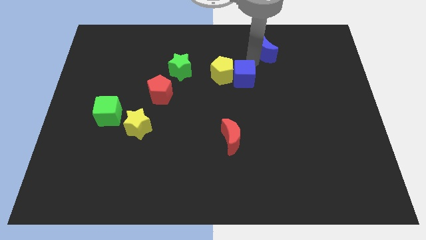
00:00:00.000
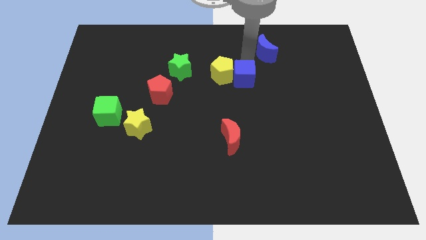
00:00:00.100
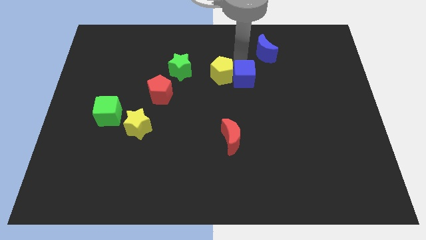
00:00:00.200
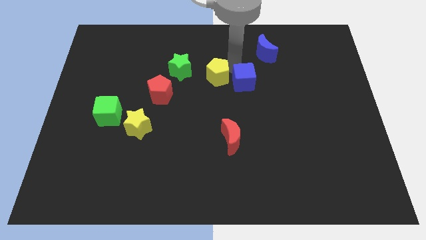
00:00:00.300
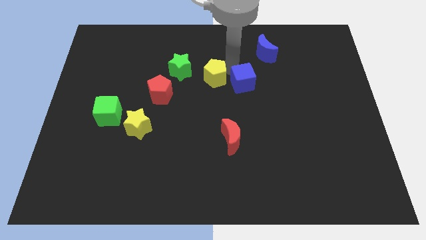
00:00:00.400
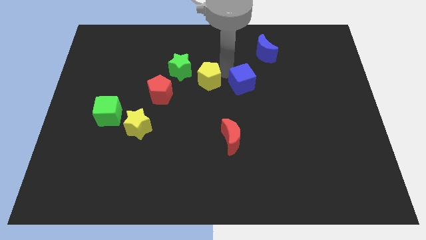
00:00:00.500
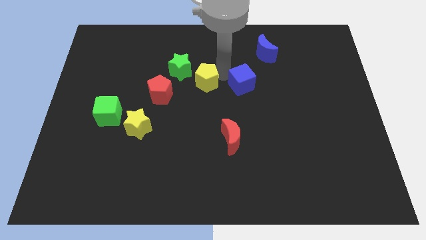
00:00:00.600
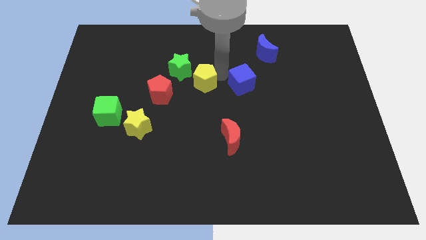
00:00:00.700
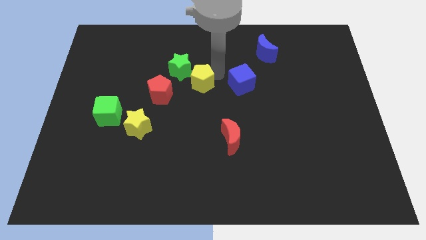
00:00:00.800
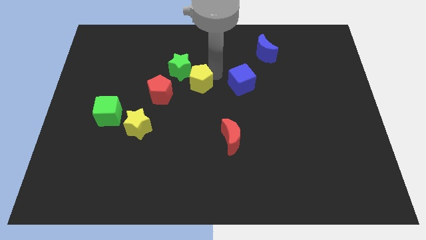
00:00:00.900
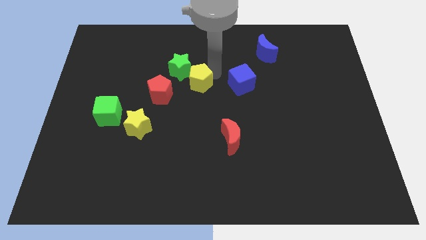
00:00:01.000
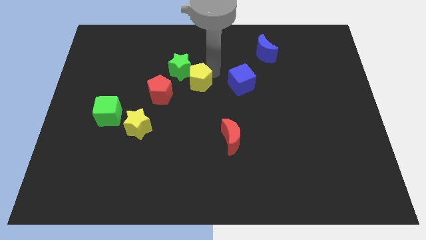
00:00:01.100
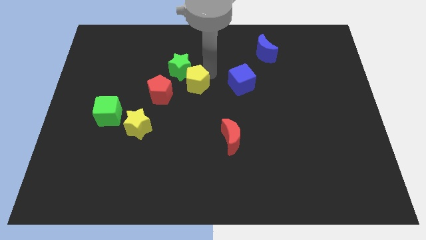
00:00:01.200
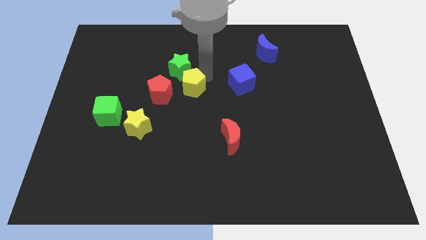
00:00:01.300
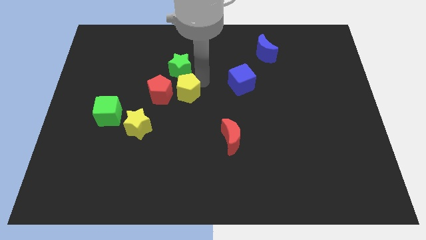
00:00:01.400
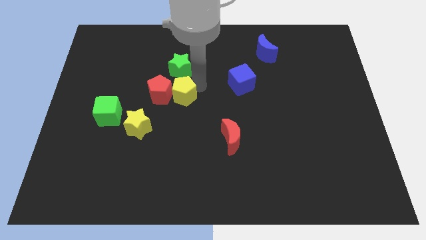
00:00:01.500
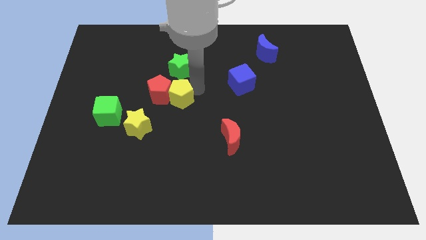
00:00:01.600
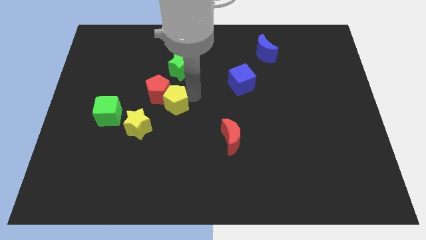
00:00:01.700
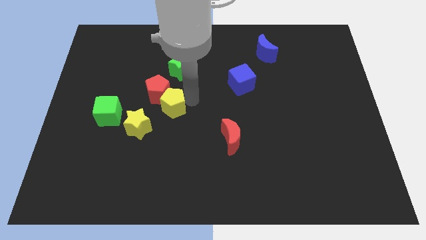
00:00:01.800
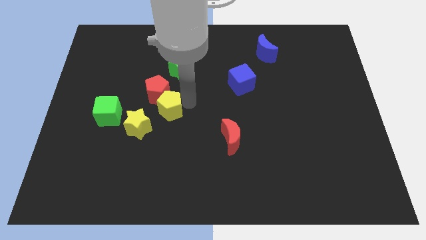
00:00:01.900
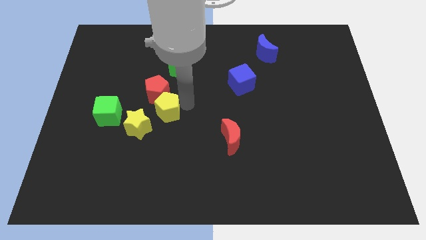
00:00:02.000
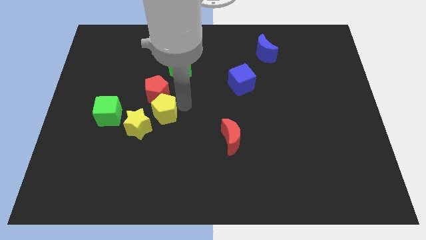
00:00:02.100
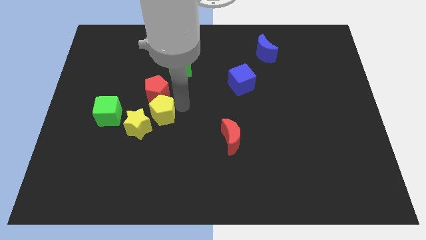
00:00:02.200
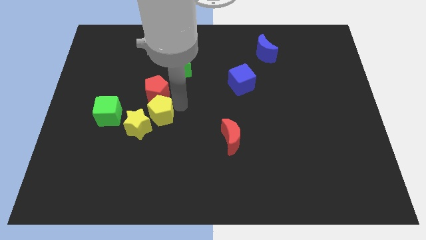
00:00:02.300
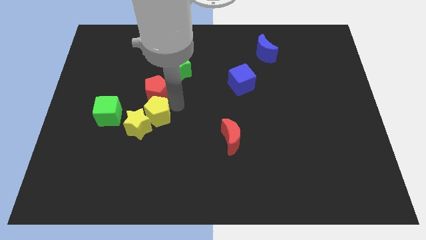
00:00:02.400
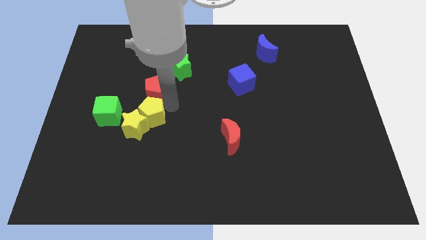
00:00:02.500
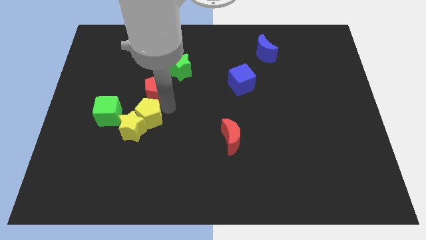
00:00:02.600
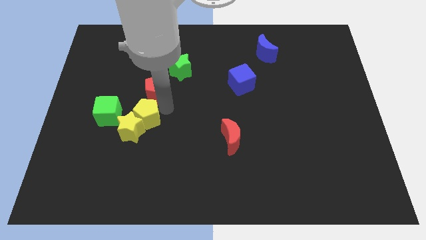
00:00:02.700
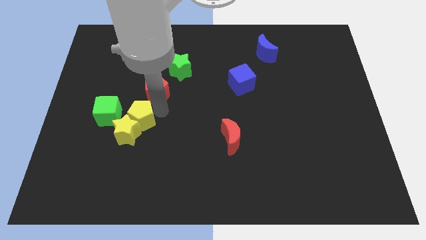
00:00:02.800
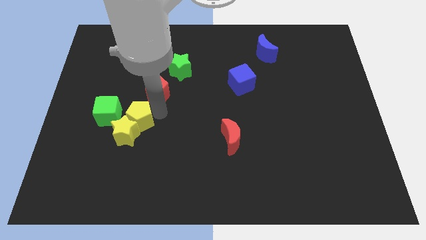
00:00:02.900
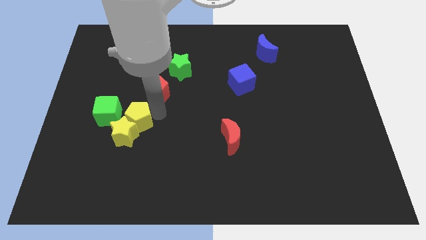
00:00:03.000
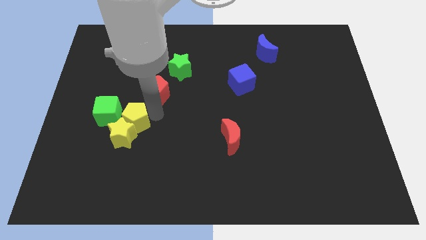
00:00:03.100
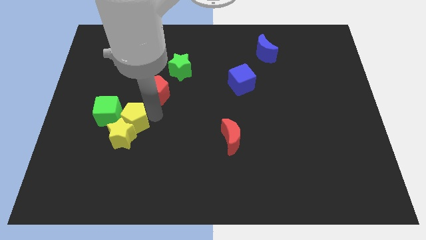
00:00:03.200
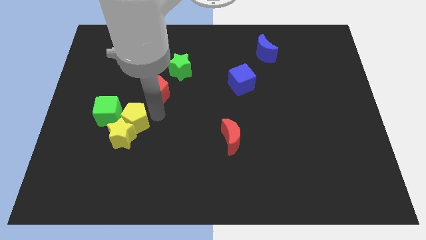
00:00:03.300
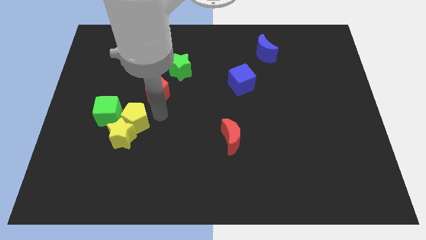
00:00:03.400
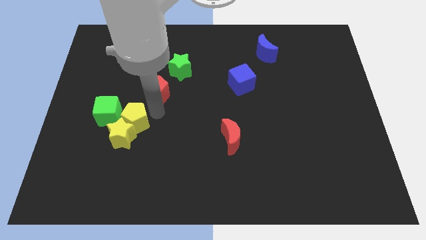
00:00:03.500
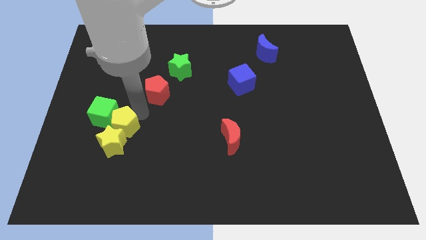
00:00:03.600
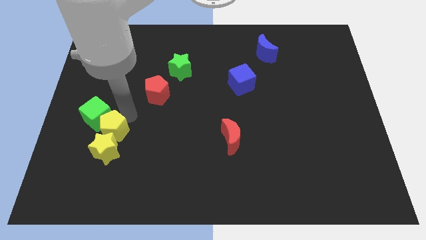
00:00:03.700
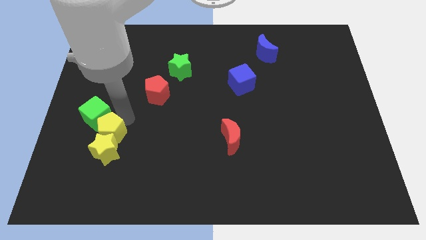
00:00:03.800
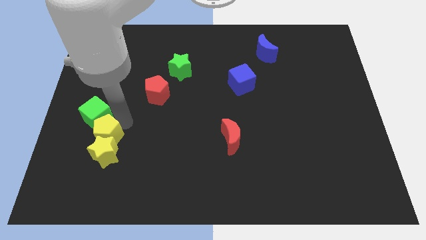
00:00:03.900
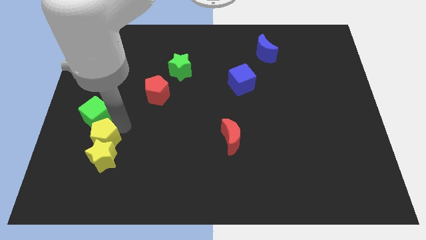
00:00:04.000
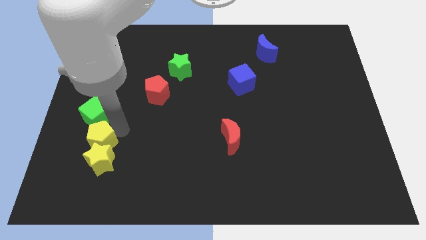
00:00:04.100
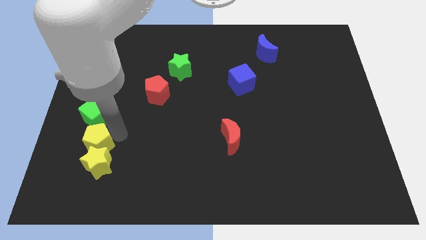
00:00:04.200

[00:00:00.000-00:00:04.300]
push the yellow pentagon into the yellow star

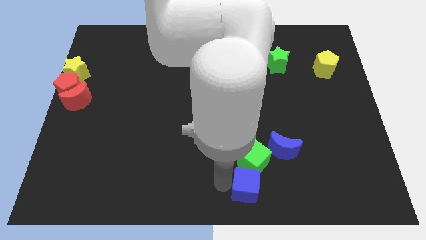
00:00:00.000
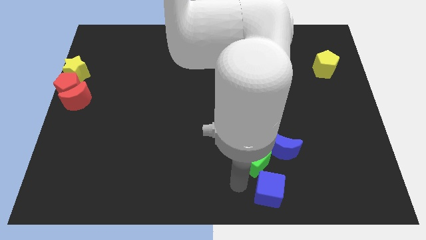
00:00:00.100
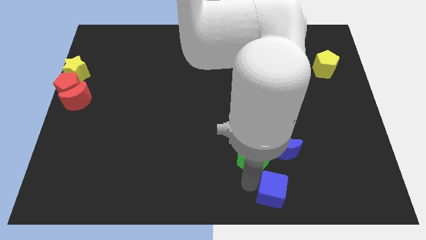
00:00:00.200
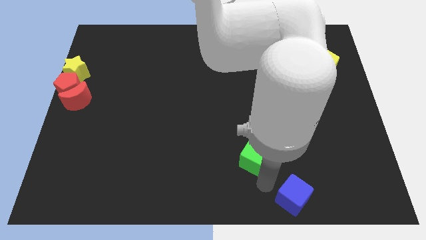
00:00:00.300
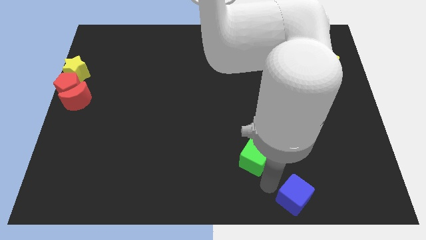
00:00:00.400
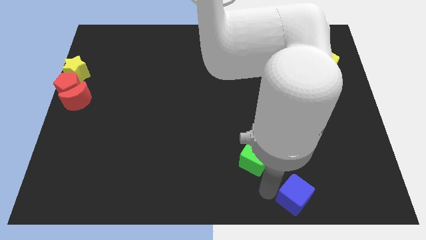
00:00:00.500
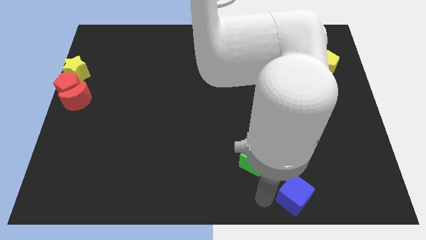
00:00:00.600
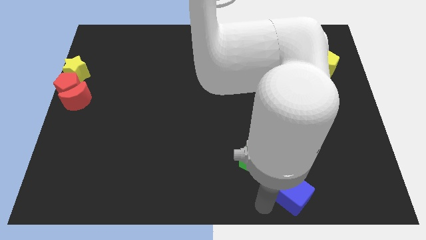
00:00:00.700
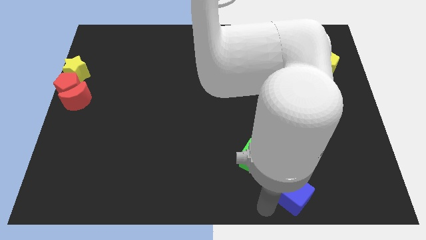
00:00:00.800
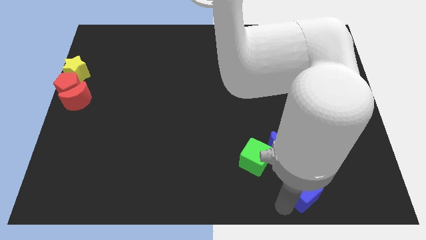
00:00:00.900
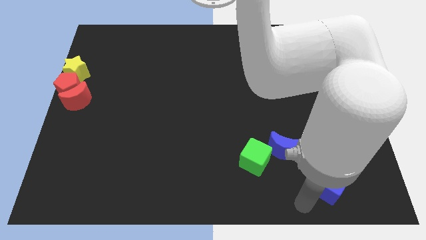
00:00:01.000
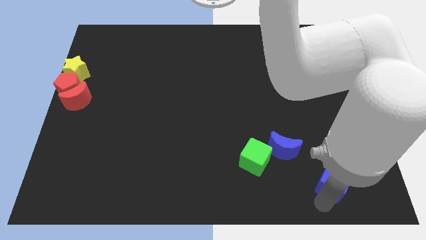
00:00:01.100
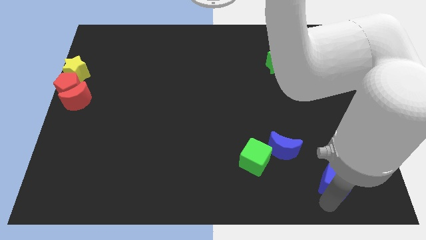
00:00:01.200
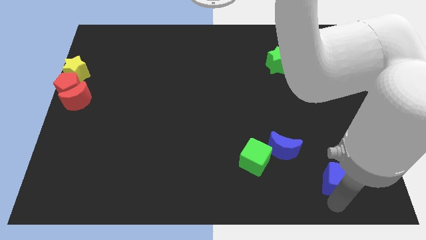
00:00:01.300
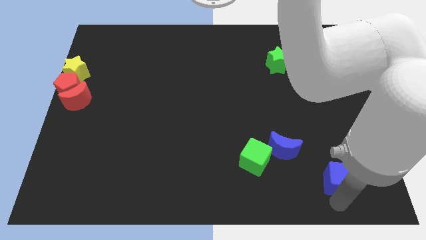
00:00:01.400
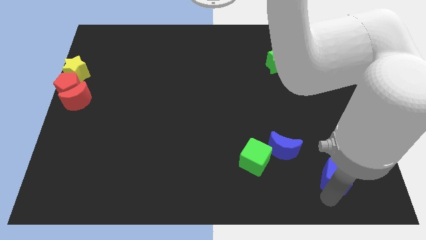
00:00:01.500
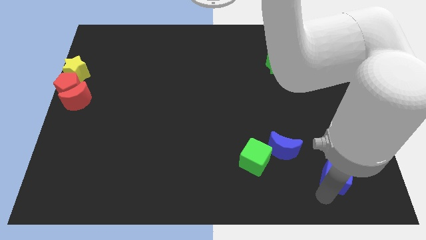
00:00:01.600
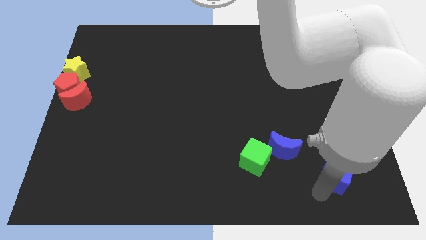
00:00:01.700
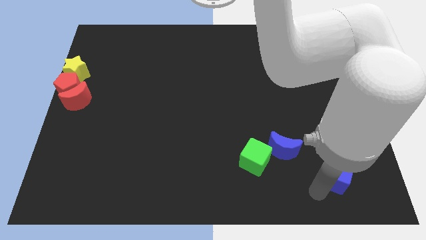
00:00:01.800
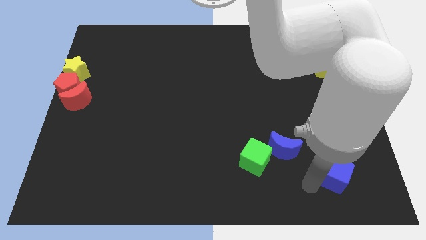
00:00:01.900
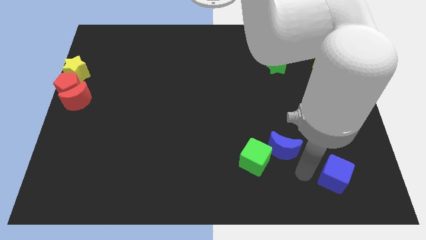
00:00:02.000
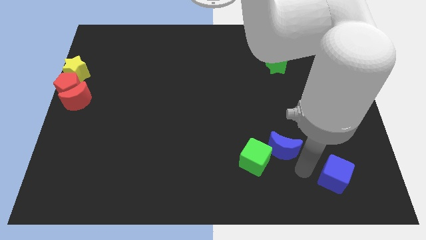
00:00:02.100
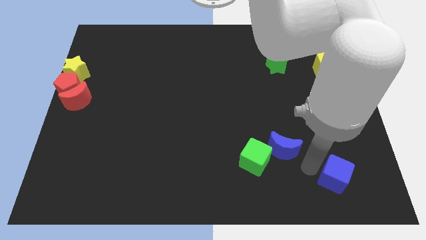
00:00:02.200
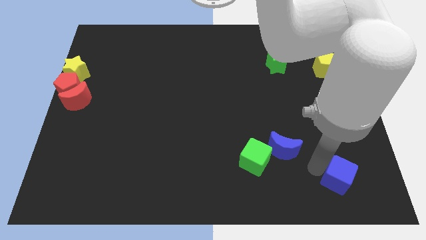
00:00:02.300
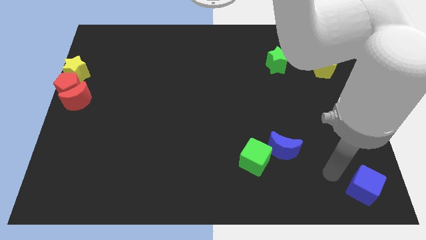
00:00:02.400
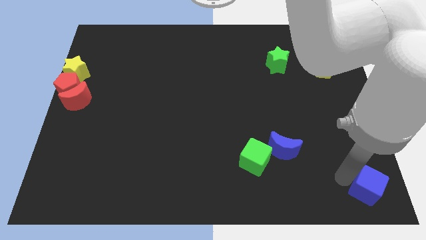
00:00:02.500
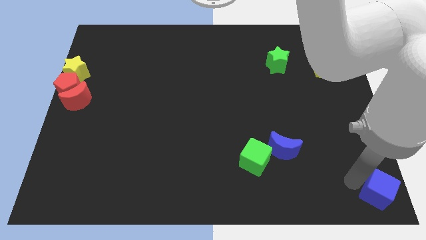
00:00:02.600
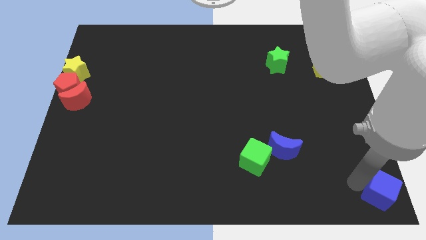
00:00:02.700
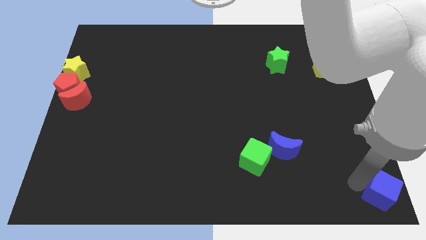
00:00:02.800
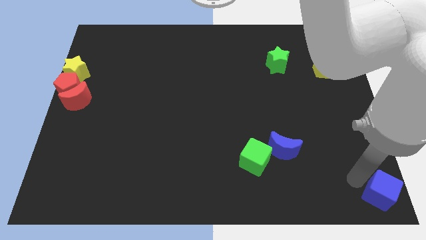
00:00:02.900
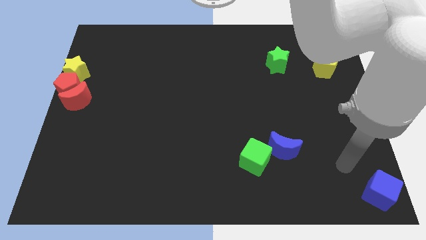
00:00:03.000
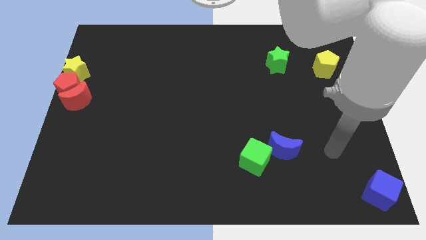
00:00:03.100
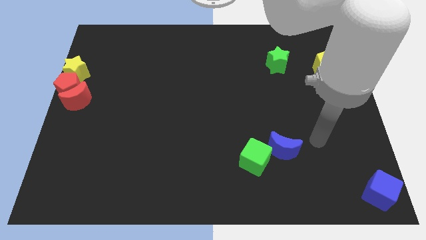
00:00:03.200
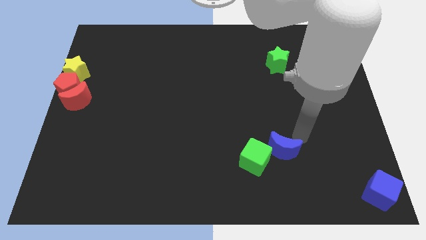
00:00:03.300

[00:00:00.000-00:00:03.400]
place the blue cube at bottom right corner of the board

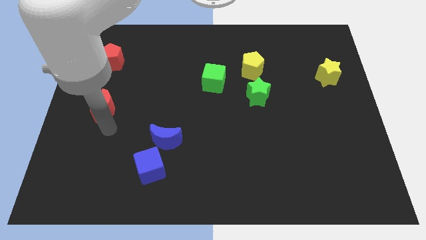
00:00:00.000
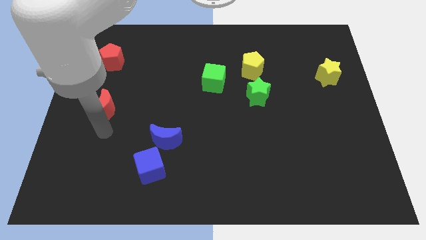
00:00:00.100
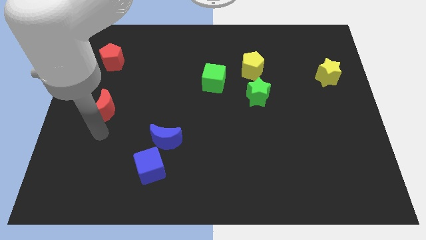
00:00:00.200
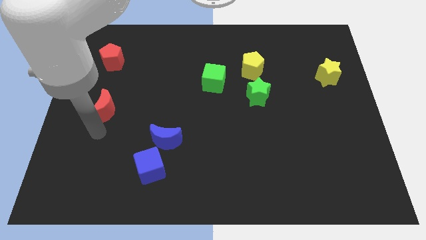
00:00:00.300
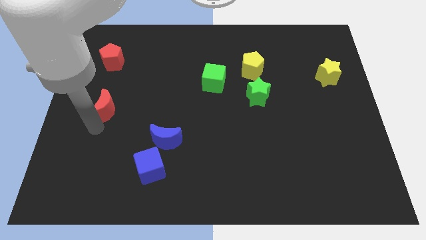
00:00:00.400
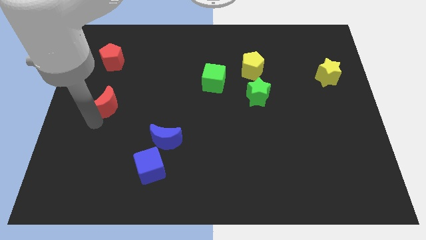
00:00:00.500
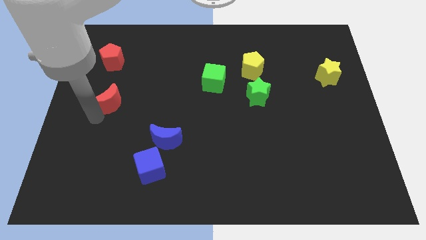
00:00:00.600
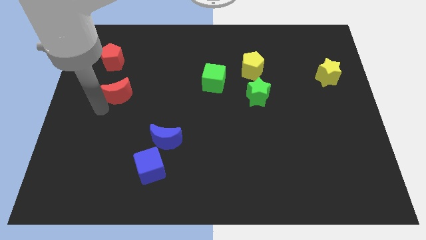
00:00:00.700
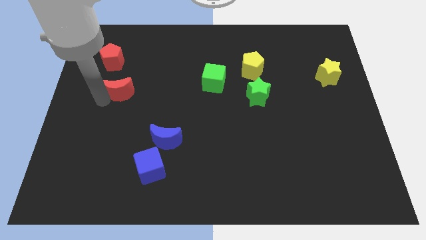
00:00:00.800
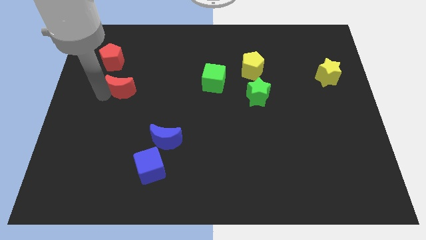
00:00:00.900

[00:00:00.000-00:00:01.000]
push the red crescent slightly to the top

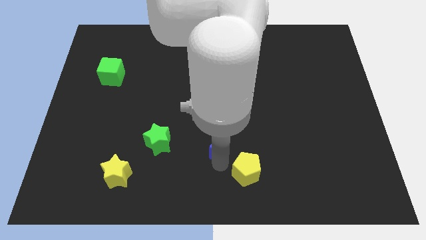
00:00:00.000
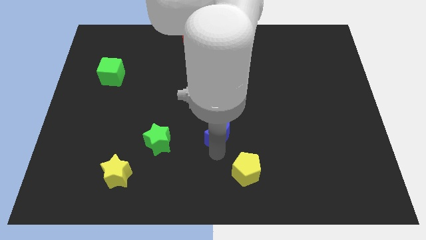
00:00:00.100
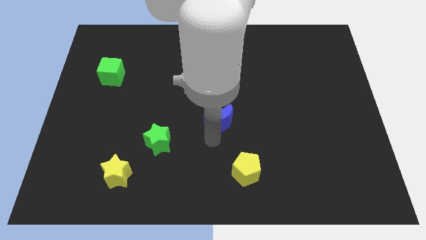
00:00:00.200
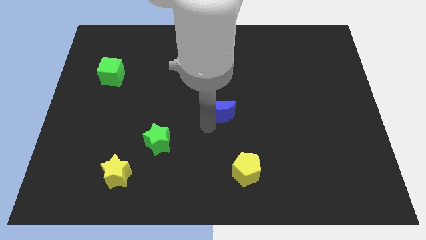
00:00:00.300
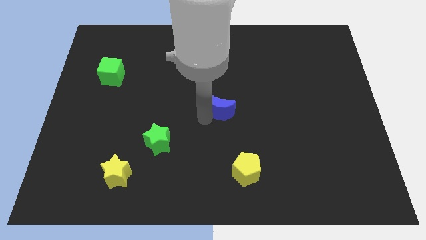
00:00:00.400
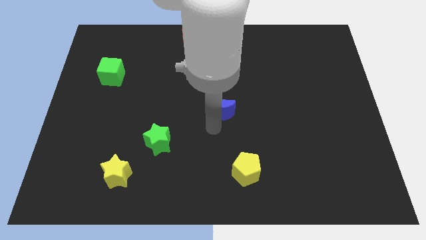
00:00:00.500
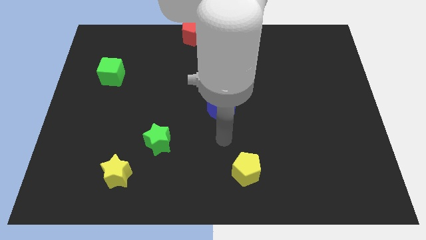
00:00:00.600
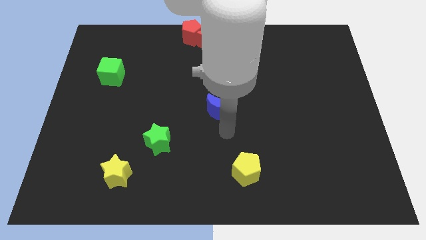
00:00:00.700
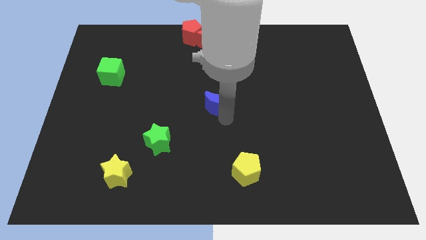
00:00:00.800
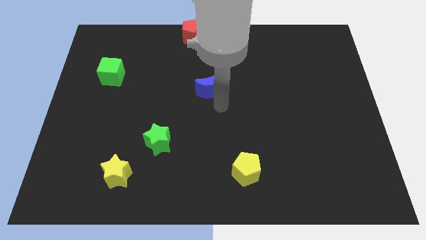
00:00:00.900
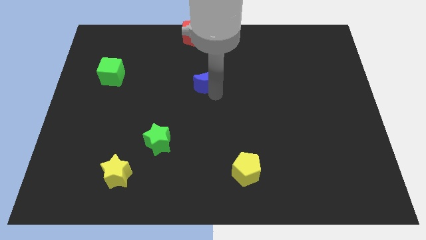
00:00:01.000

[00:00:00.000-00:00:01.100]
push the blue crescent to the center of the board
